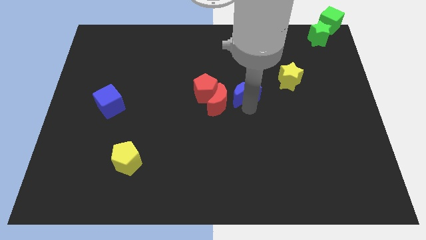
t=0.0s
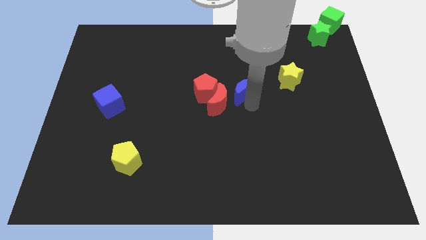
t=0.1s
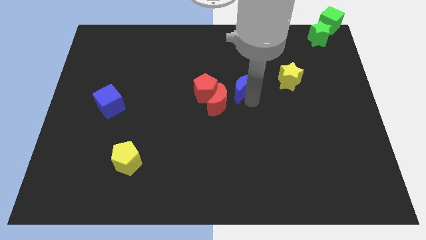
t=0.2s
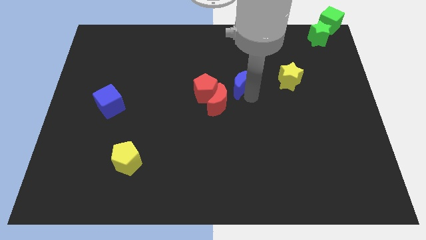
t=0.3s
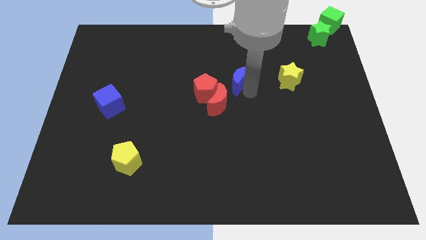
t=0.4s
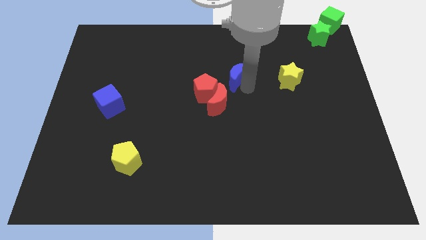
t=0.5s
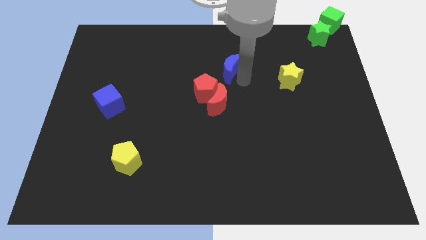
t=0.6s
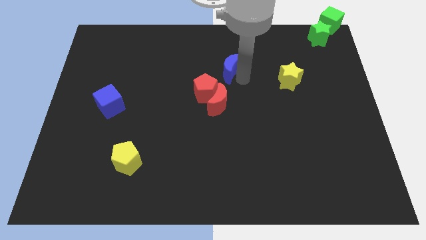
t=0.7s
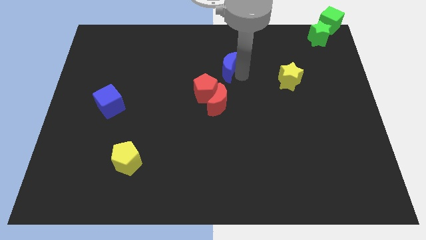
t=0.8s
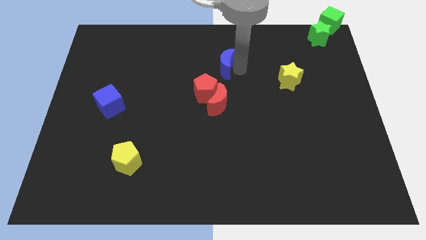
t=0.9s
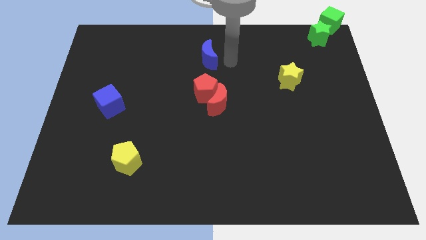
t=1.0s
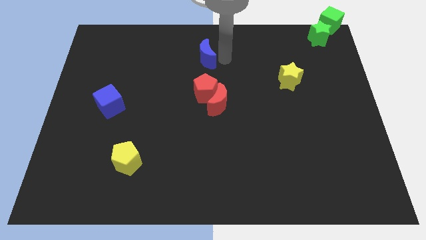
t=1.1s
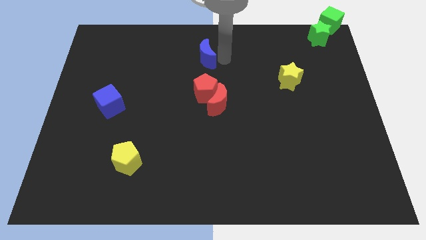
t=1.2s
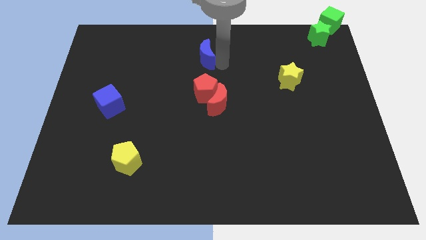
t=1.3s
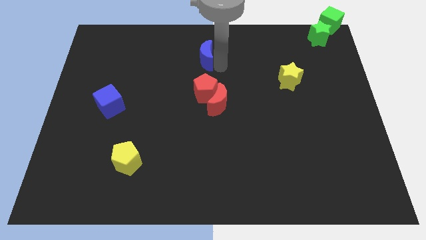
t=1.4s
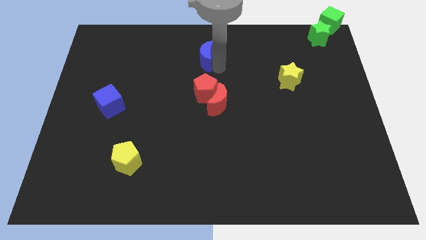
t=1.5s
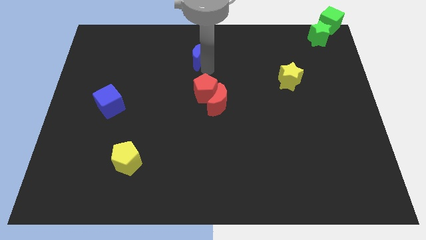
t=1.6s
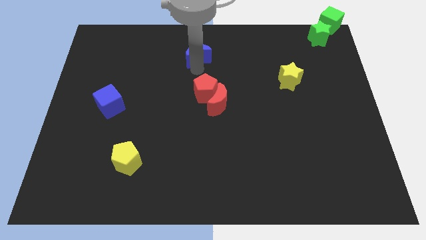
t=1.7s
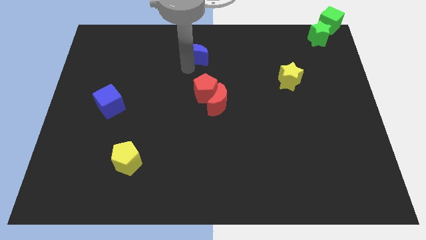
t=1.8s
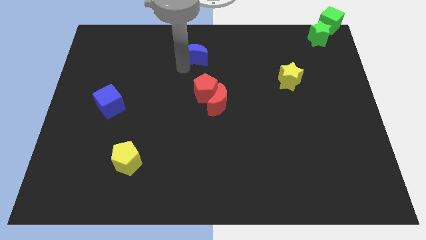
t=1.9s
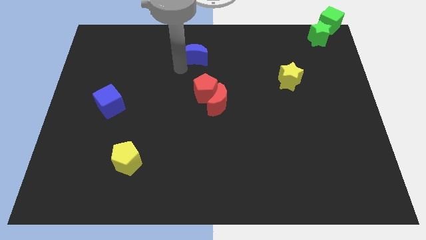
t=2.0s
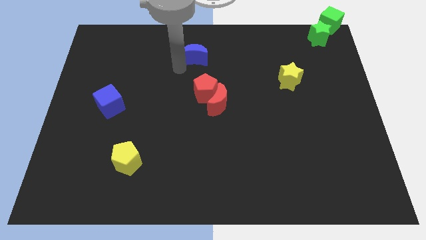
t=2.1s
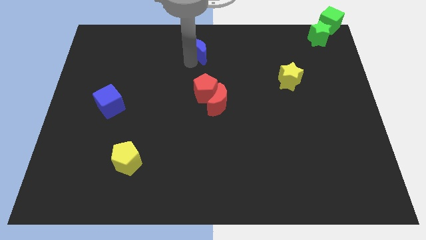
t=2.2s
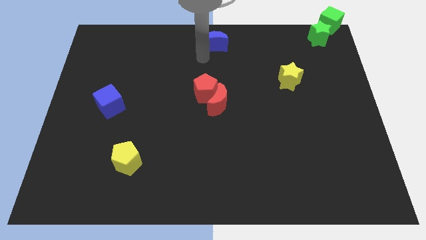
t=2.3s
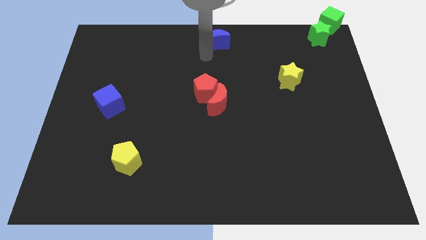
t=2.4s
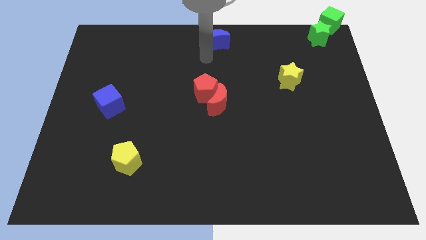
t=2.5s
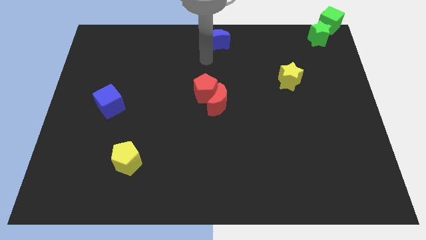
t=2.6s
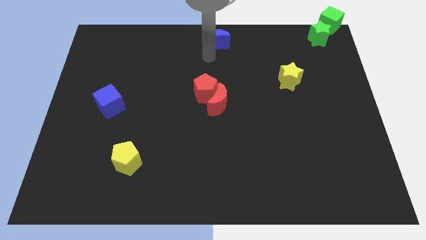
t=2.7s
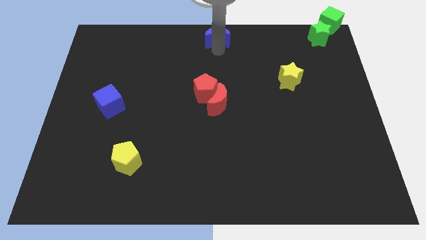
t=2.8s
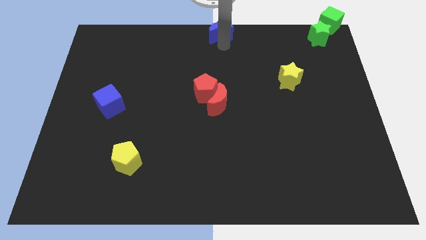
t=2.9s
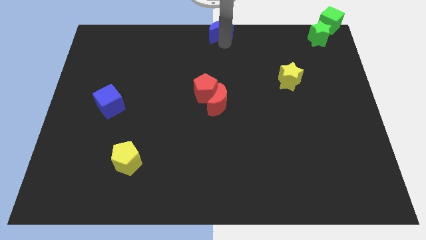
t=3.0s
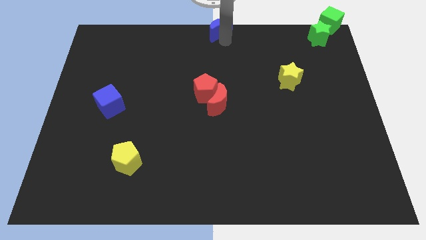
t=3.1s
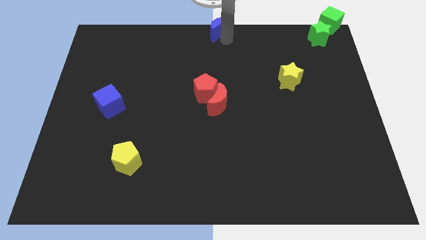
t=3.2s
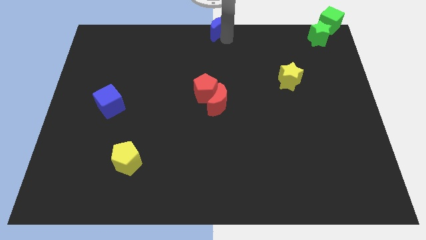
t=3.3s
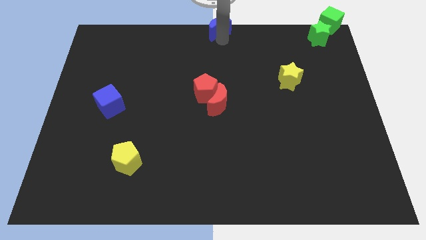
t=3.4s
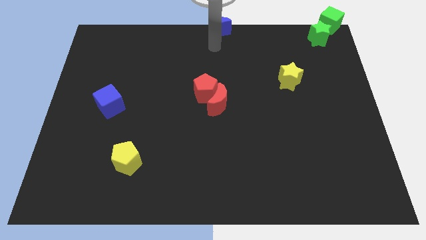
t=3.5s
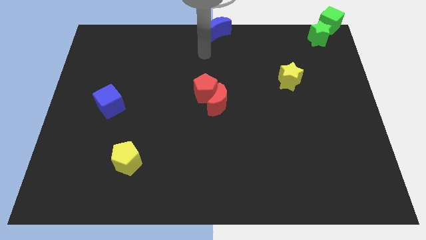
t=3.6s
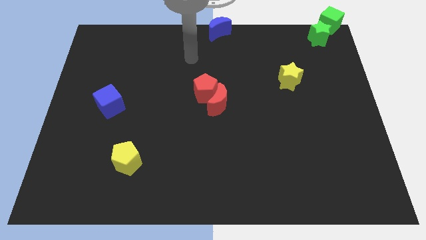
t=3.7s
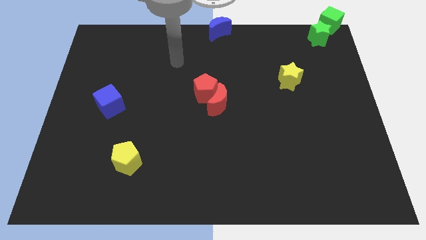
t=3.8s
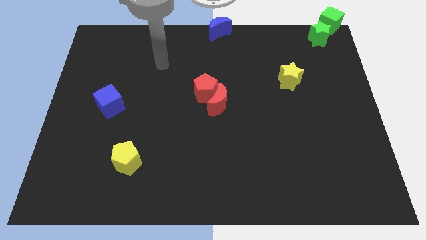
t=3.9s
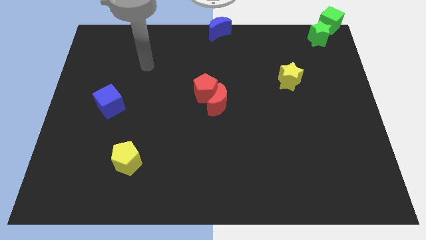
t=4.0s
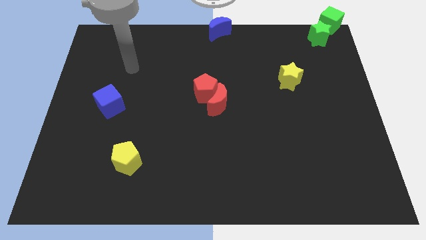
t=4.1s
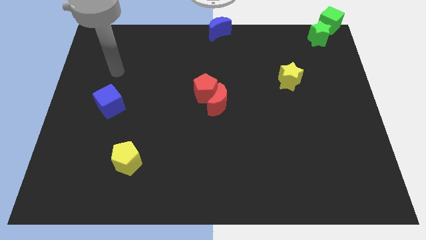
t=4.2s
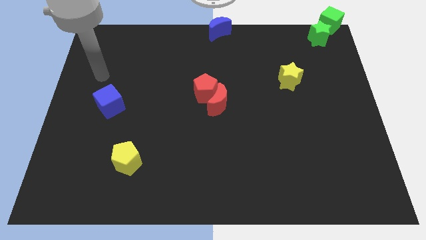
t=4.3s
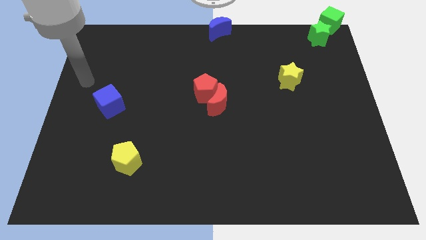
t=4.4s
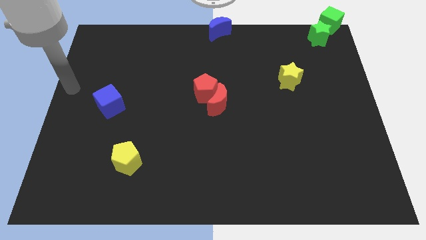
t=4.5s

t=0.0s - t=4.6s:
place blue moon to the top center of the board

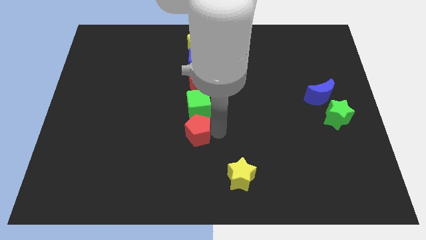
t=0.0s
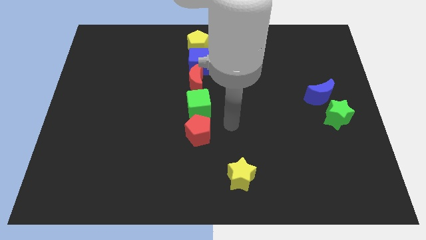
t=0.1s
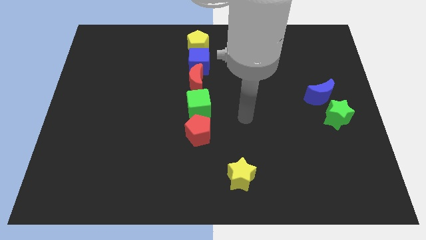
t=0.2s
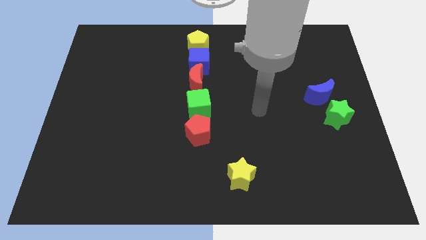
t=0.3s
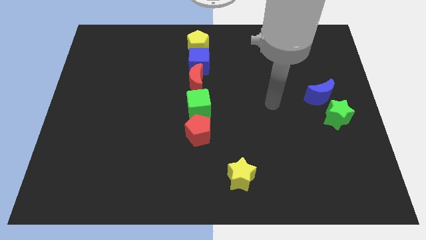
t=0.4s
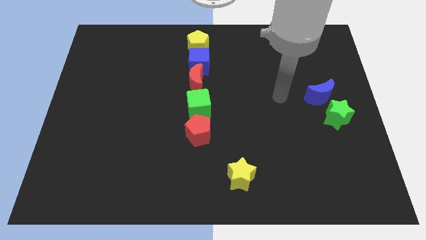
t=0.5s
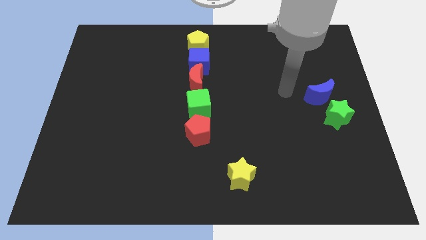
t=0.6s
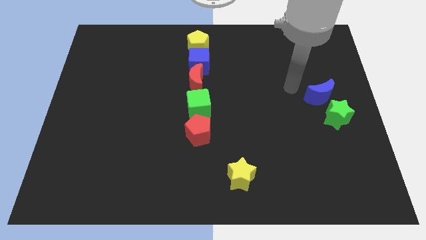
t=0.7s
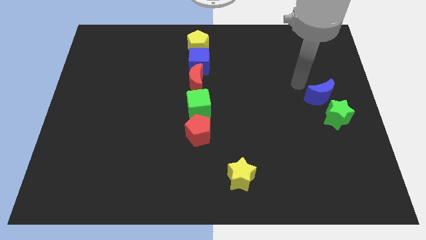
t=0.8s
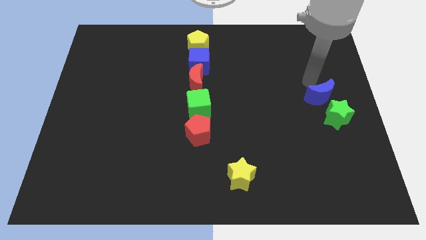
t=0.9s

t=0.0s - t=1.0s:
go away from the red pentagon

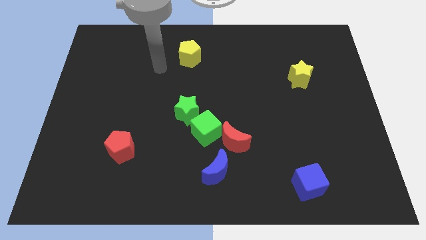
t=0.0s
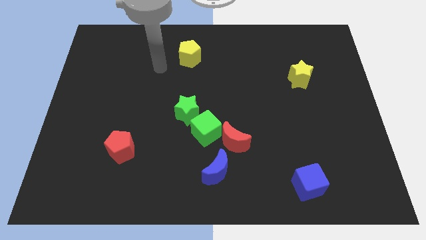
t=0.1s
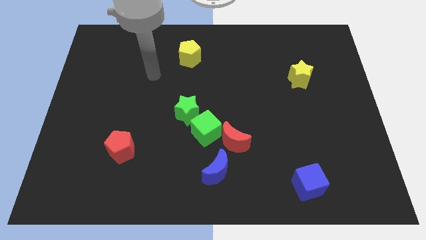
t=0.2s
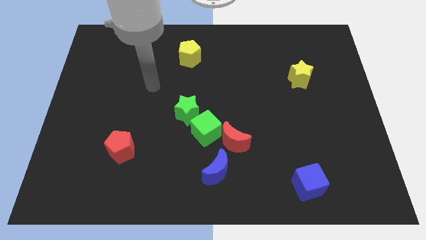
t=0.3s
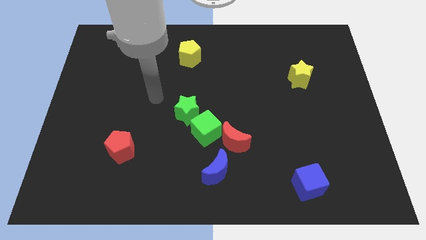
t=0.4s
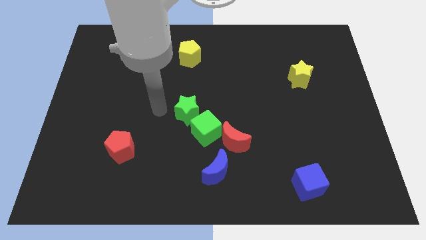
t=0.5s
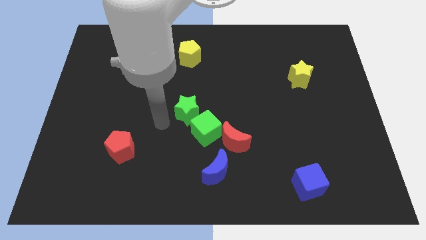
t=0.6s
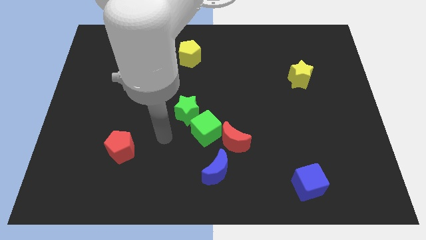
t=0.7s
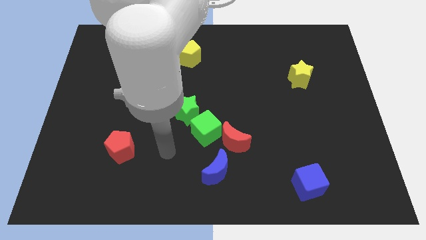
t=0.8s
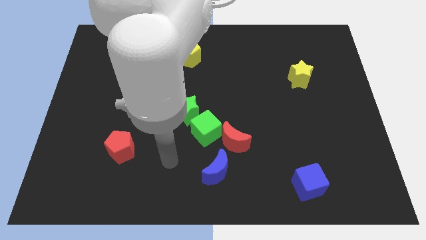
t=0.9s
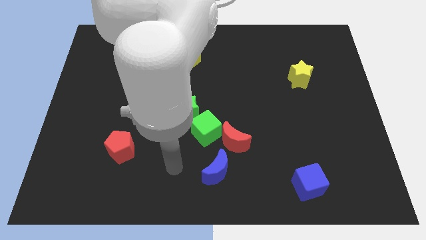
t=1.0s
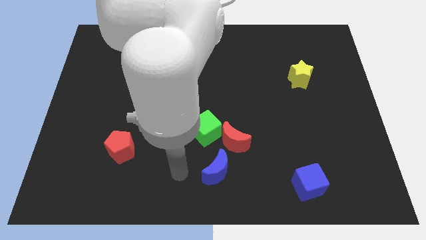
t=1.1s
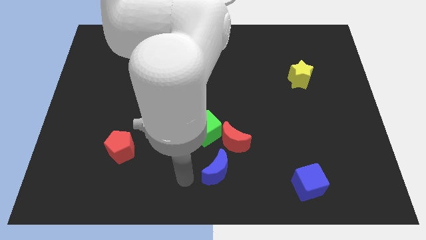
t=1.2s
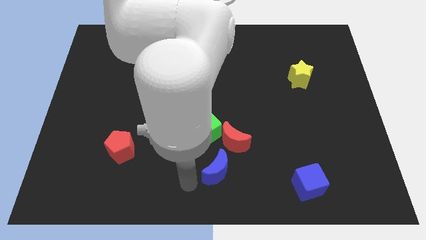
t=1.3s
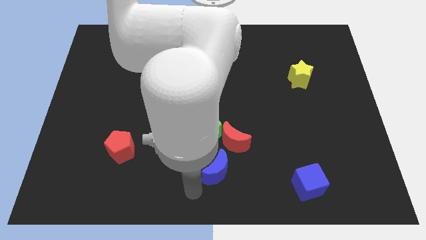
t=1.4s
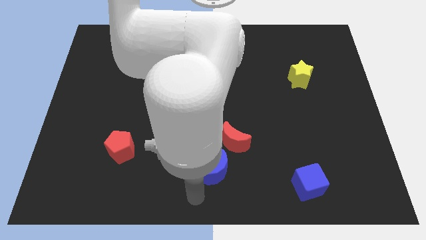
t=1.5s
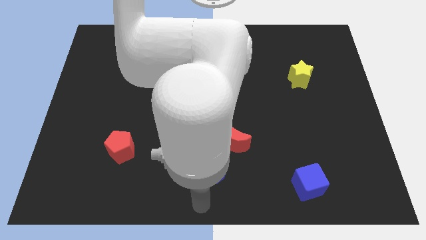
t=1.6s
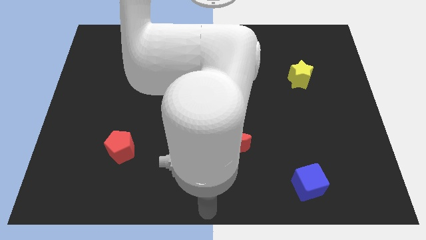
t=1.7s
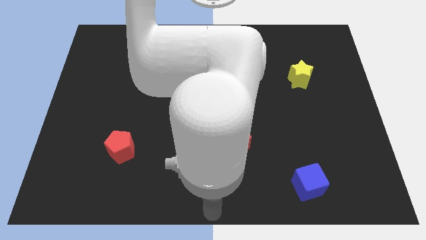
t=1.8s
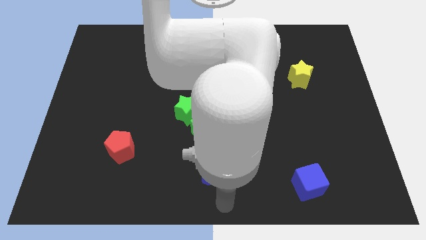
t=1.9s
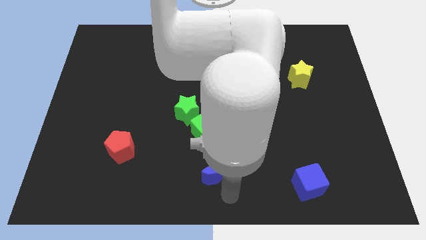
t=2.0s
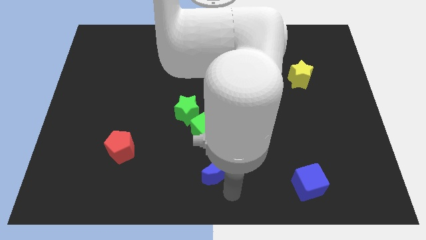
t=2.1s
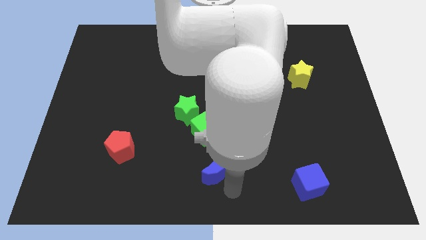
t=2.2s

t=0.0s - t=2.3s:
move your arm to the bottom side of the blue moon

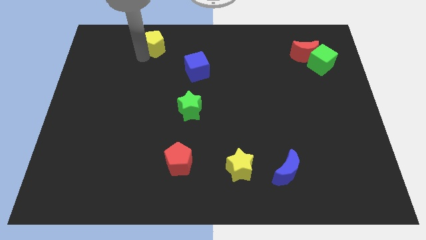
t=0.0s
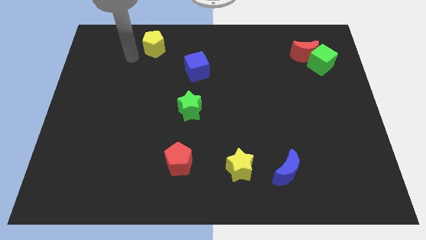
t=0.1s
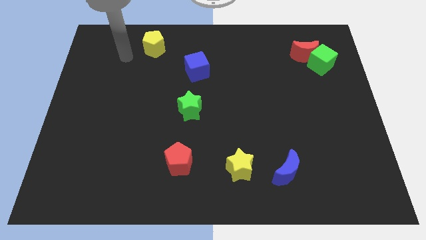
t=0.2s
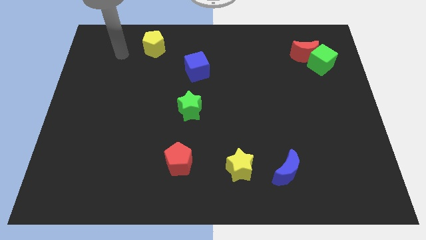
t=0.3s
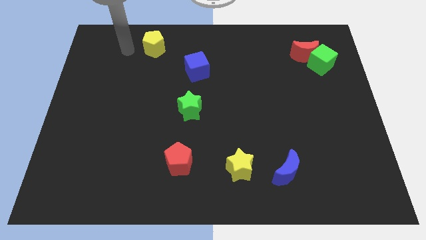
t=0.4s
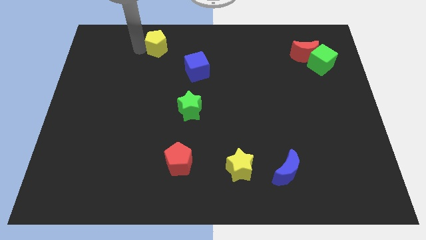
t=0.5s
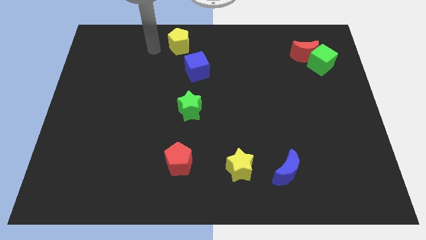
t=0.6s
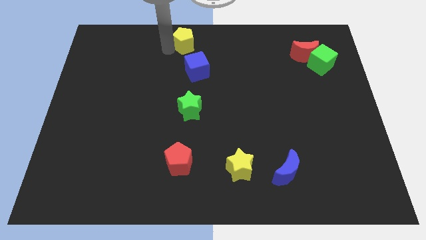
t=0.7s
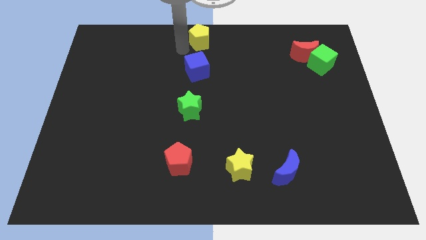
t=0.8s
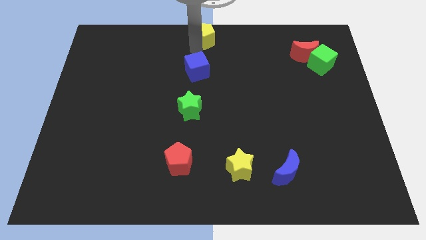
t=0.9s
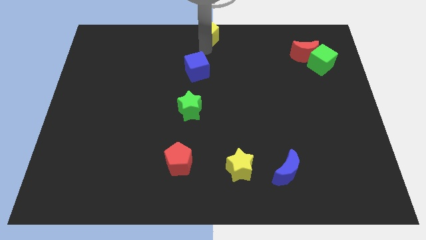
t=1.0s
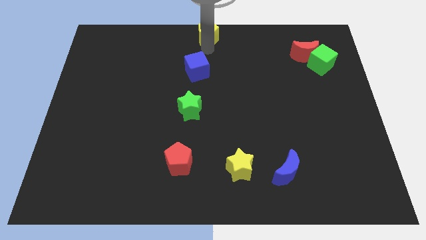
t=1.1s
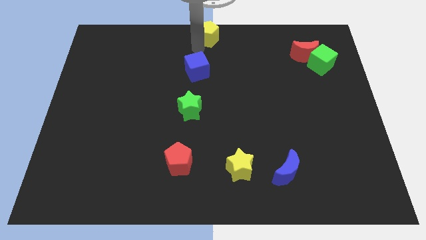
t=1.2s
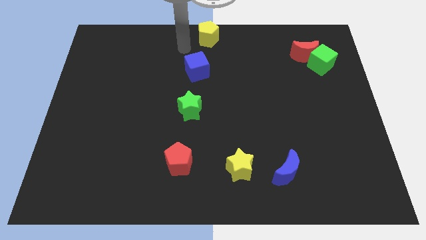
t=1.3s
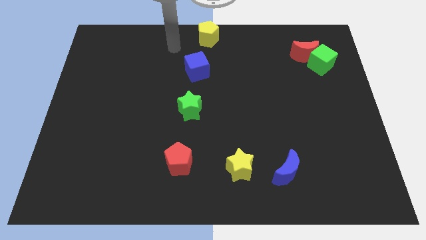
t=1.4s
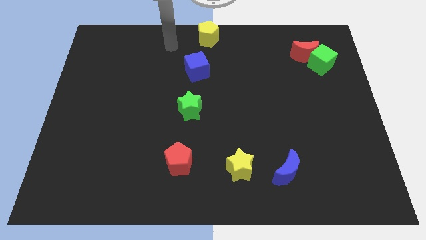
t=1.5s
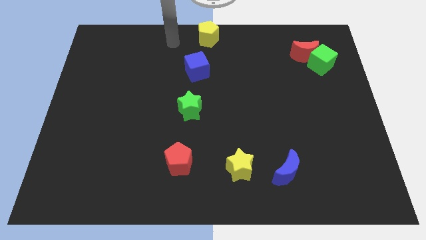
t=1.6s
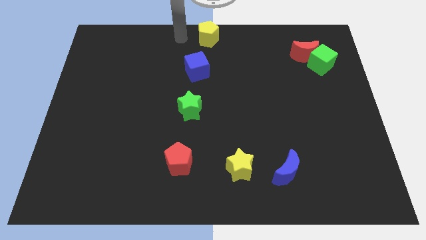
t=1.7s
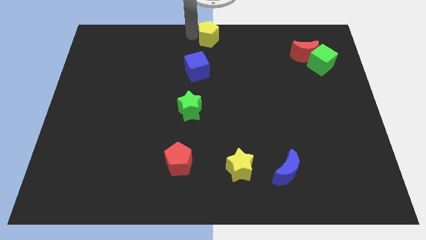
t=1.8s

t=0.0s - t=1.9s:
push the yellow pentagon to the top center of the board
